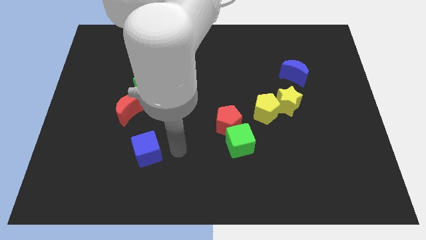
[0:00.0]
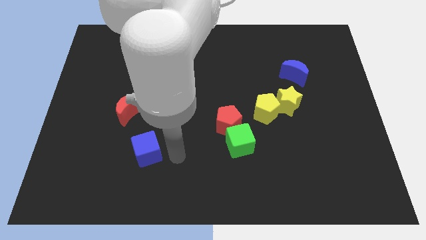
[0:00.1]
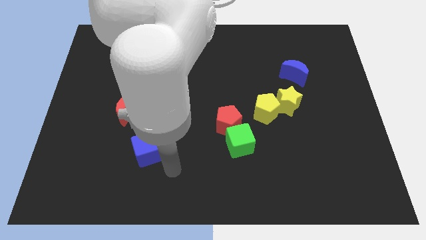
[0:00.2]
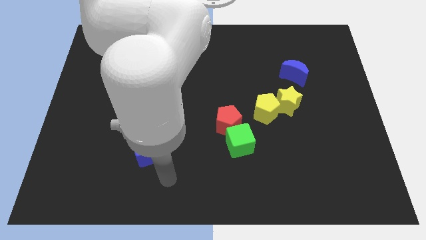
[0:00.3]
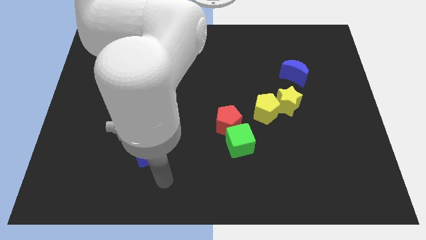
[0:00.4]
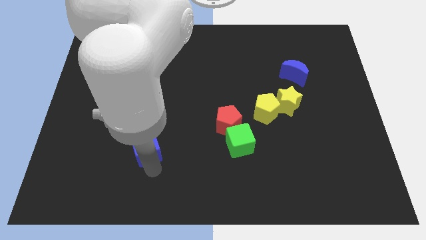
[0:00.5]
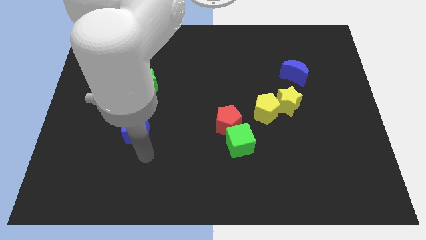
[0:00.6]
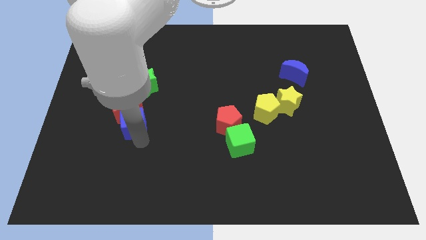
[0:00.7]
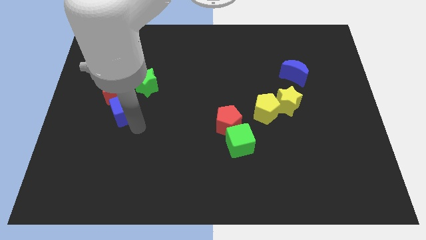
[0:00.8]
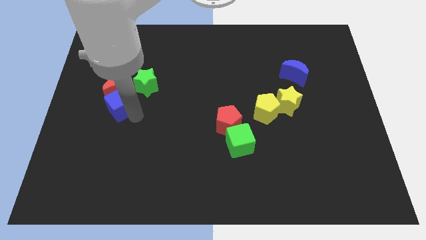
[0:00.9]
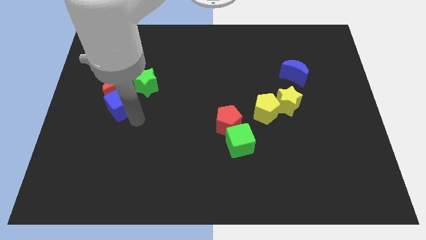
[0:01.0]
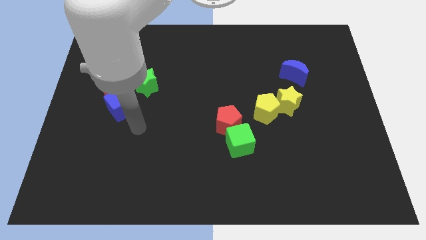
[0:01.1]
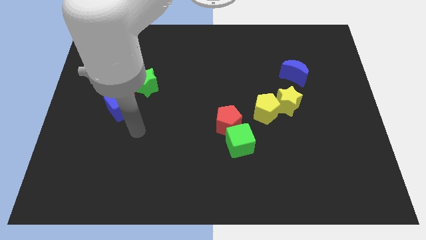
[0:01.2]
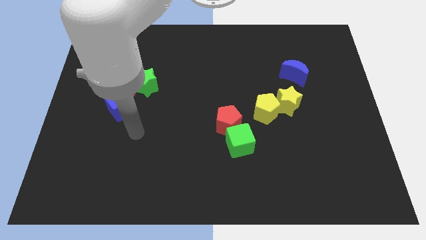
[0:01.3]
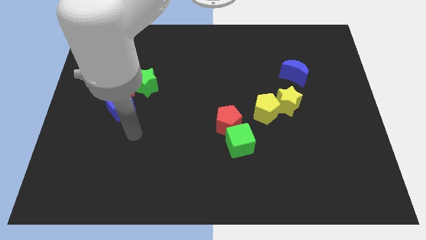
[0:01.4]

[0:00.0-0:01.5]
push the blue cube into red moon

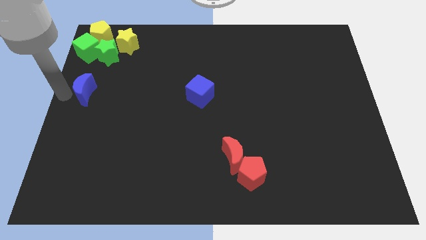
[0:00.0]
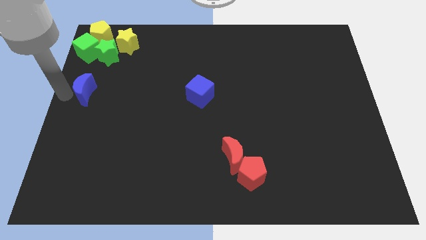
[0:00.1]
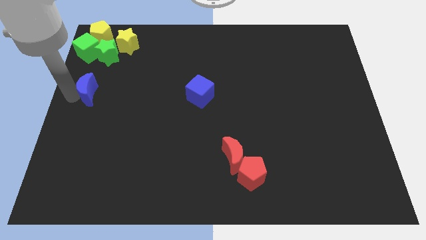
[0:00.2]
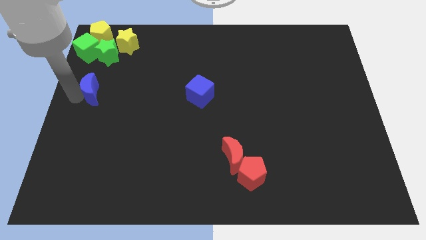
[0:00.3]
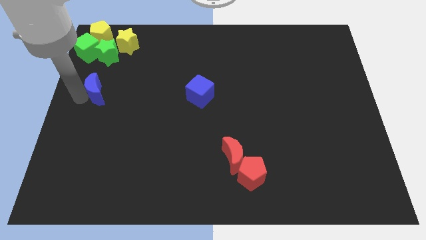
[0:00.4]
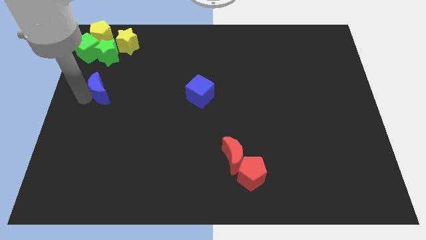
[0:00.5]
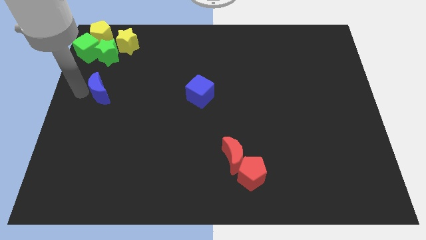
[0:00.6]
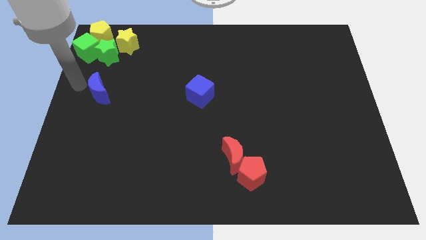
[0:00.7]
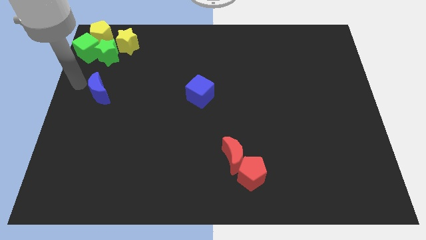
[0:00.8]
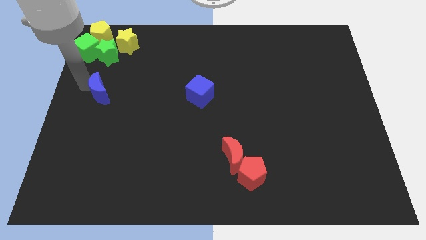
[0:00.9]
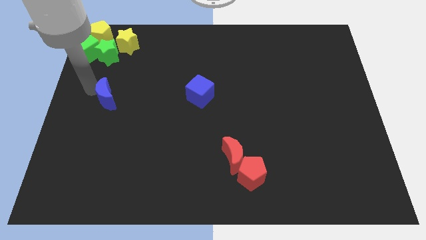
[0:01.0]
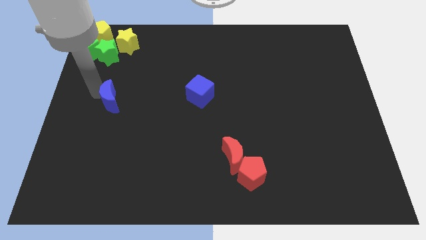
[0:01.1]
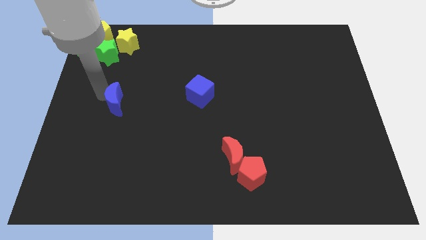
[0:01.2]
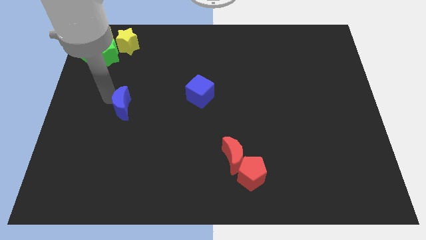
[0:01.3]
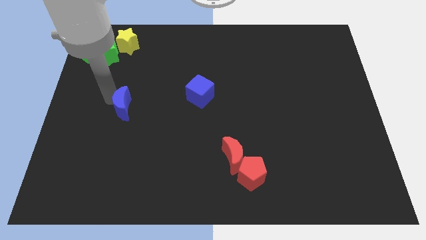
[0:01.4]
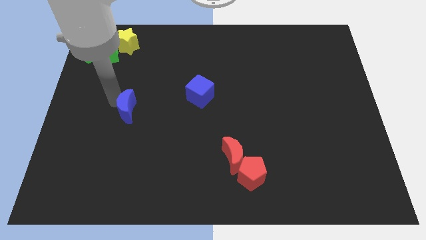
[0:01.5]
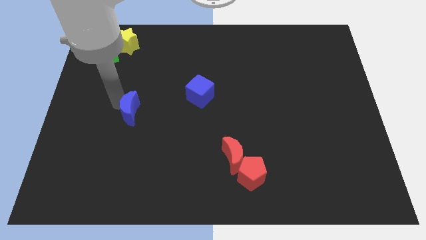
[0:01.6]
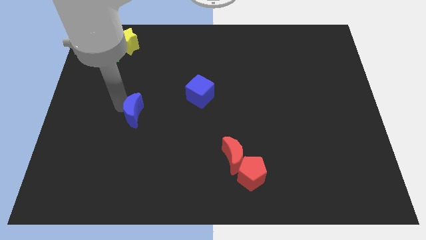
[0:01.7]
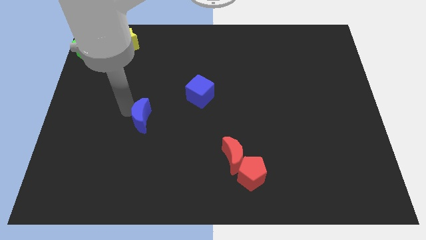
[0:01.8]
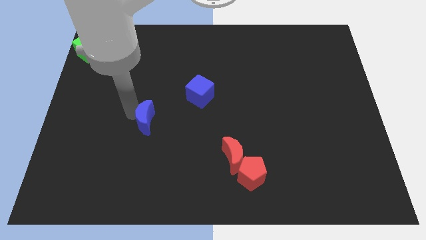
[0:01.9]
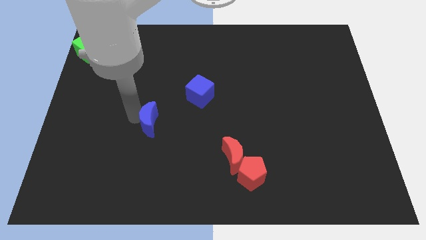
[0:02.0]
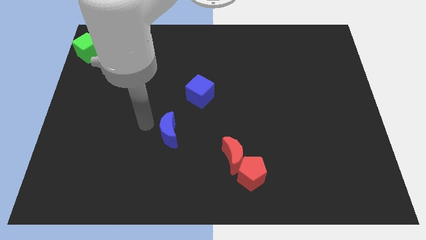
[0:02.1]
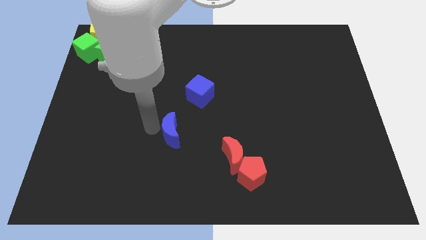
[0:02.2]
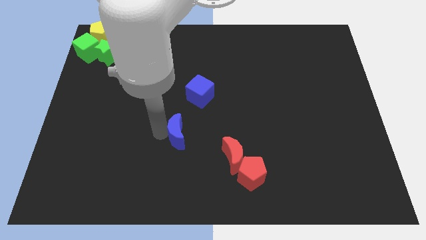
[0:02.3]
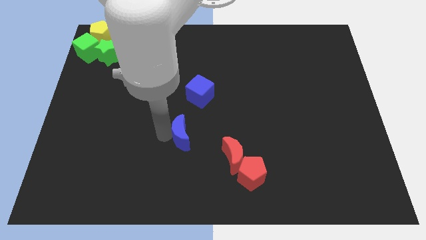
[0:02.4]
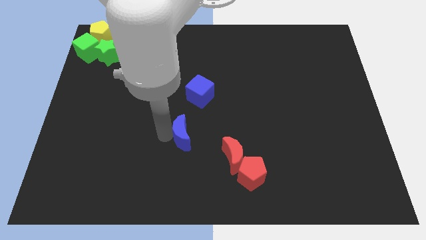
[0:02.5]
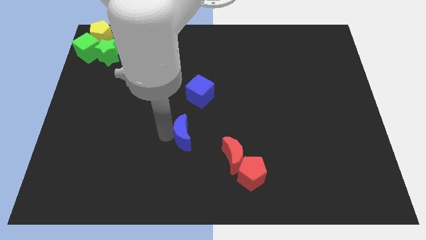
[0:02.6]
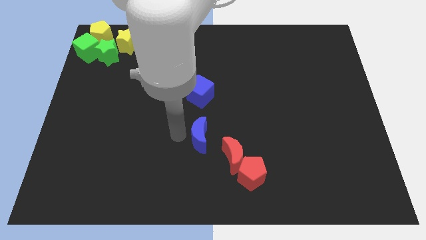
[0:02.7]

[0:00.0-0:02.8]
place the blue moon below the blue cube

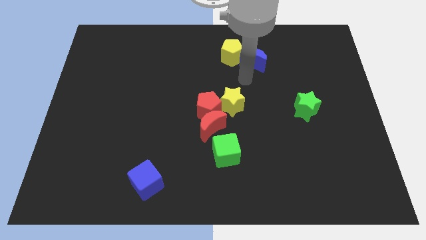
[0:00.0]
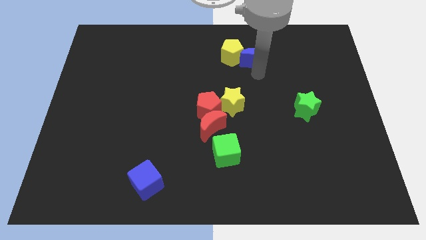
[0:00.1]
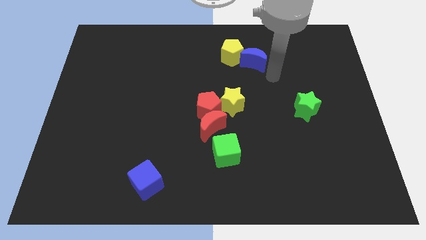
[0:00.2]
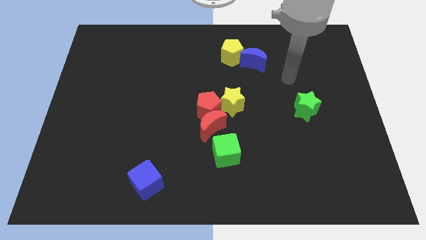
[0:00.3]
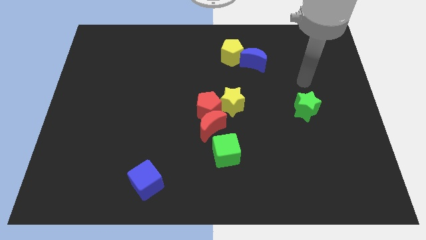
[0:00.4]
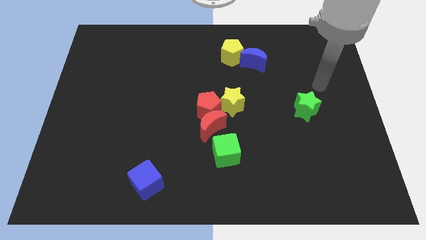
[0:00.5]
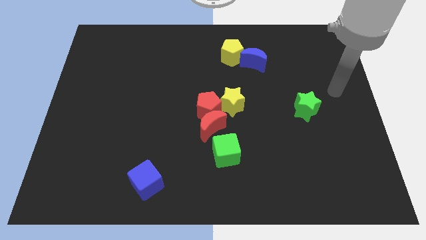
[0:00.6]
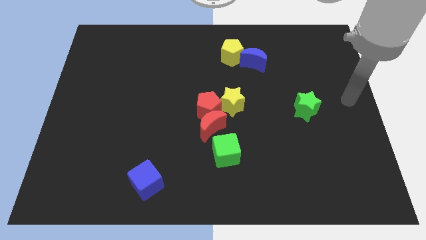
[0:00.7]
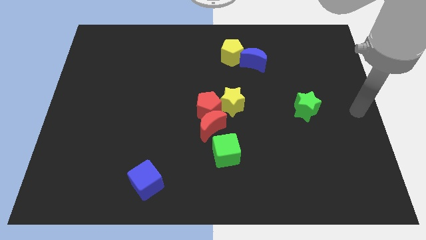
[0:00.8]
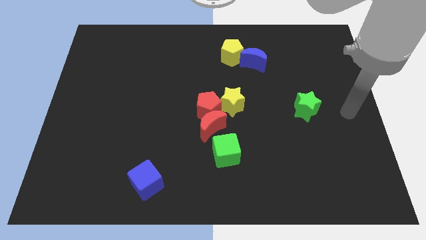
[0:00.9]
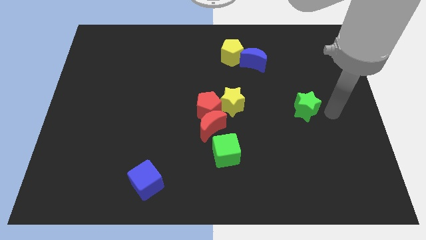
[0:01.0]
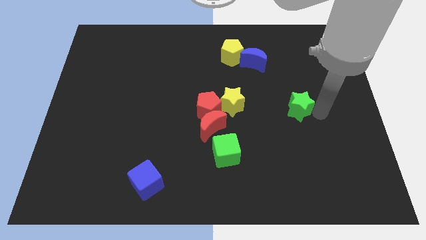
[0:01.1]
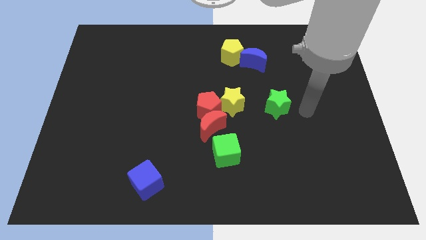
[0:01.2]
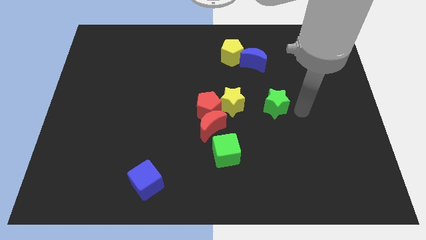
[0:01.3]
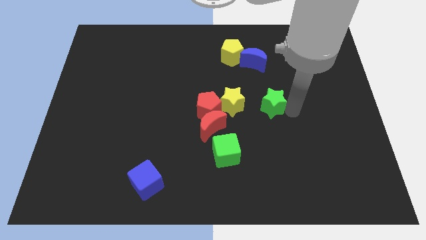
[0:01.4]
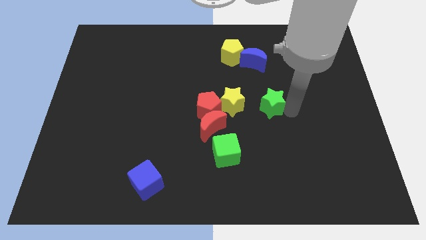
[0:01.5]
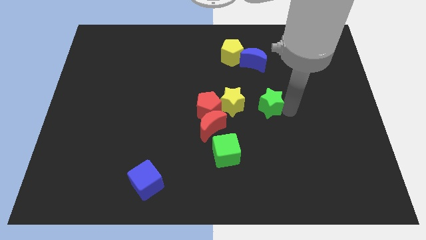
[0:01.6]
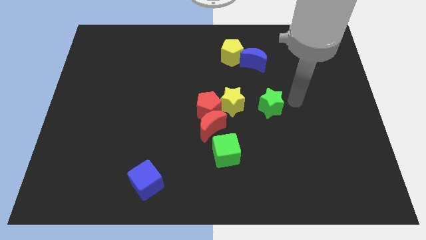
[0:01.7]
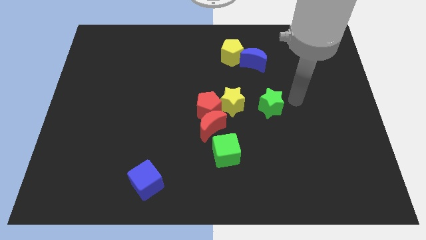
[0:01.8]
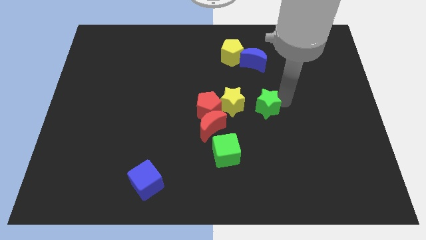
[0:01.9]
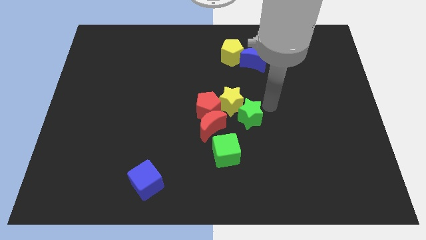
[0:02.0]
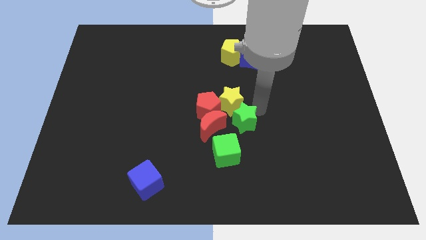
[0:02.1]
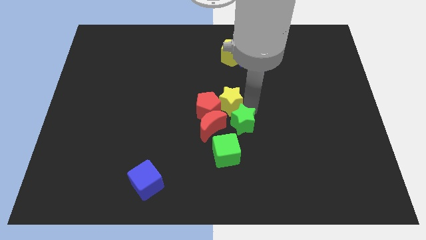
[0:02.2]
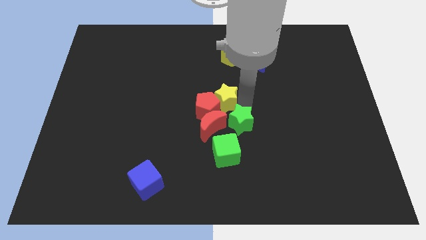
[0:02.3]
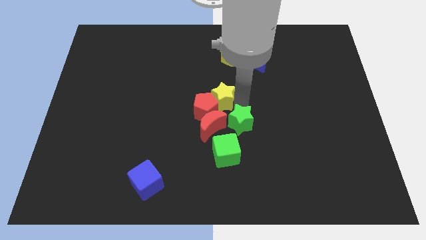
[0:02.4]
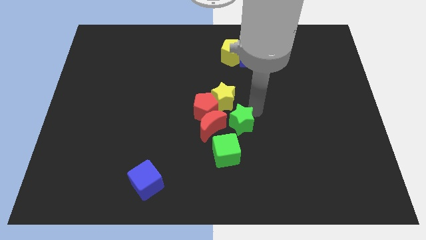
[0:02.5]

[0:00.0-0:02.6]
move the green star into the red moon and green cube

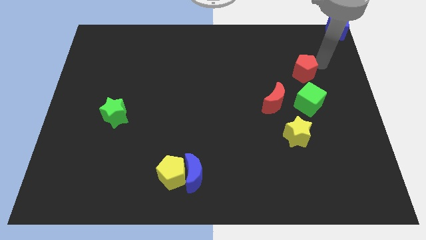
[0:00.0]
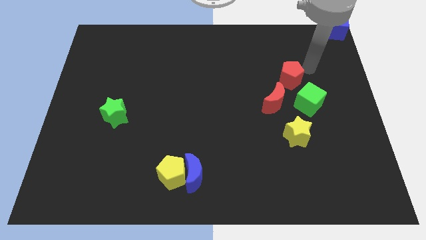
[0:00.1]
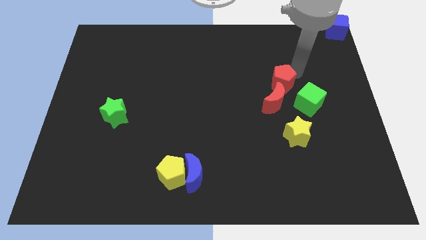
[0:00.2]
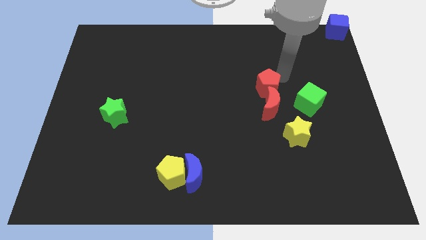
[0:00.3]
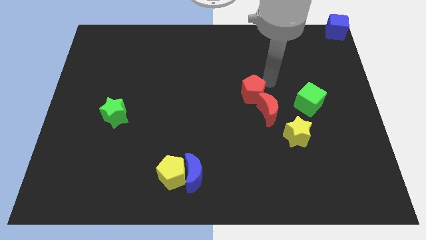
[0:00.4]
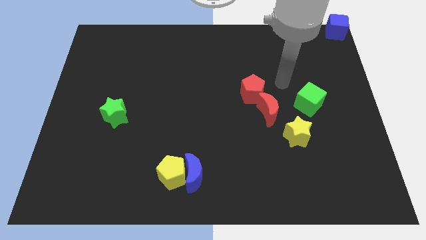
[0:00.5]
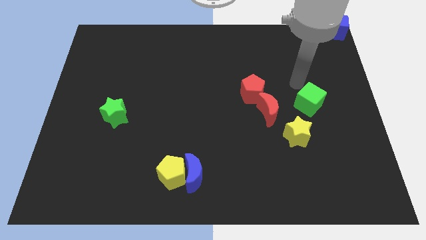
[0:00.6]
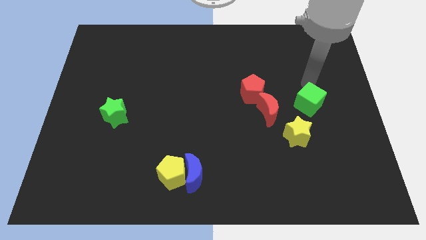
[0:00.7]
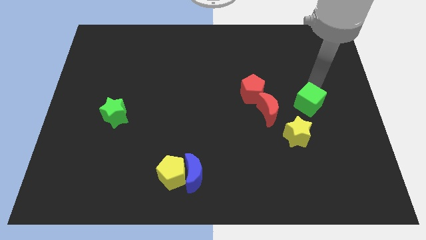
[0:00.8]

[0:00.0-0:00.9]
push the red blocks towards the left side of green cube

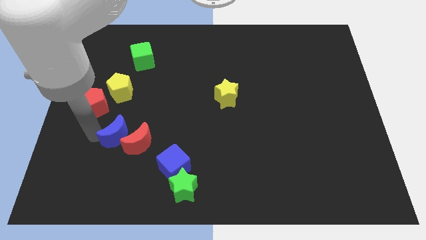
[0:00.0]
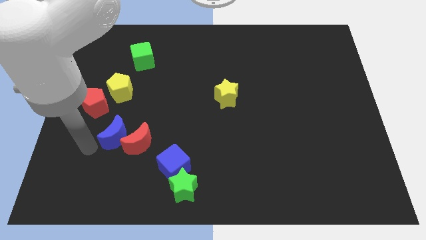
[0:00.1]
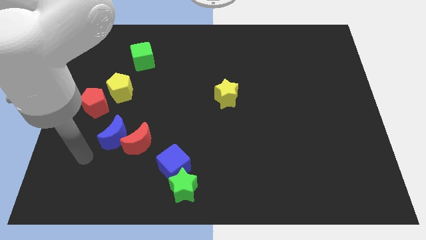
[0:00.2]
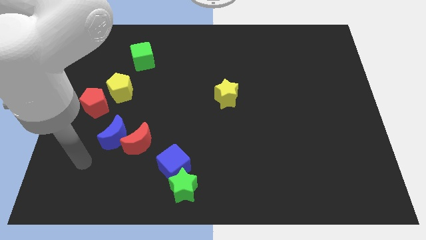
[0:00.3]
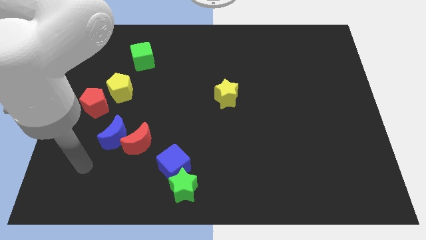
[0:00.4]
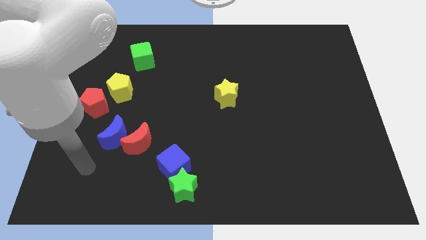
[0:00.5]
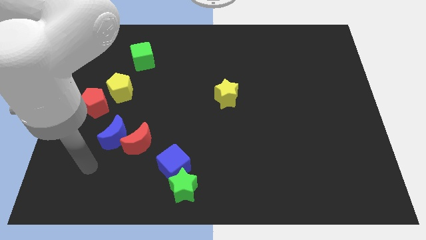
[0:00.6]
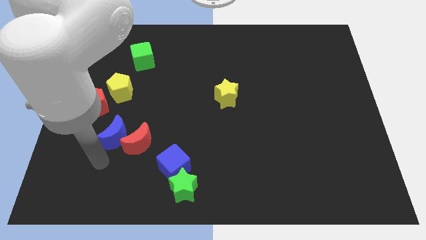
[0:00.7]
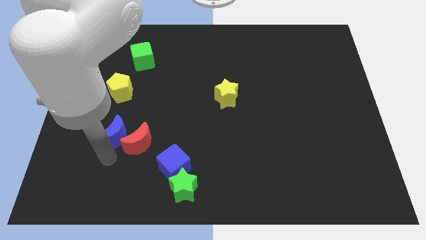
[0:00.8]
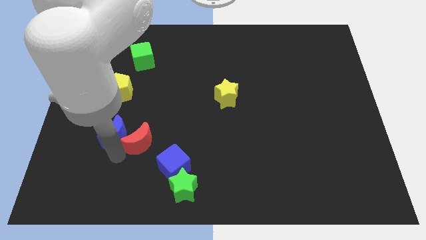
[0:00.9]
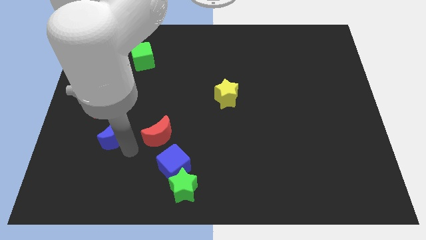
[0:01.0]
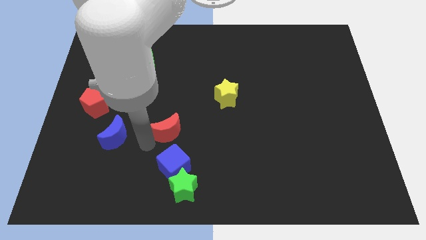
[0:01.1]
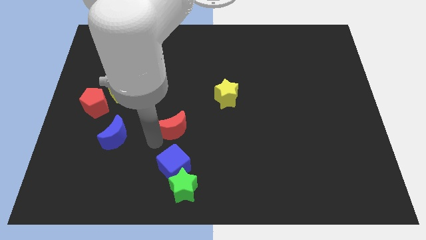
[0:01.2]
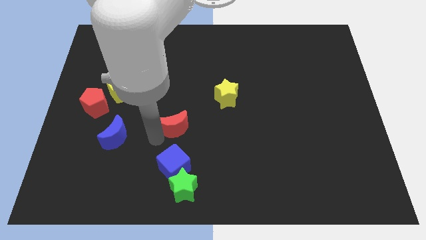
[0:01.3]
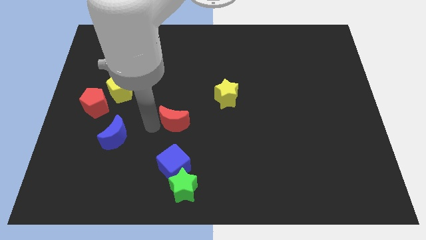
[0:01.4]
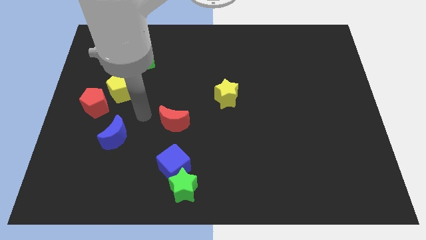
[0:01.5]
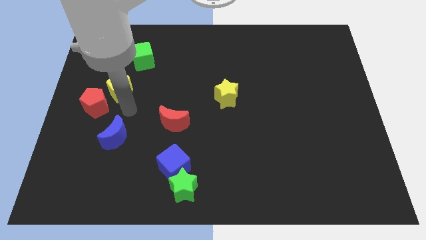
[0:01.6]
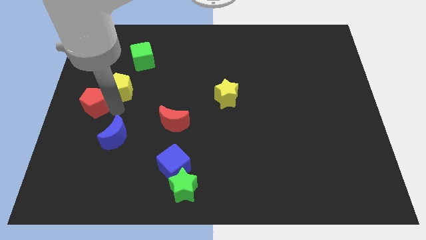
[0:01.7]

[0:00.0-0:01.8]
push the red moon above blue cube
